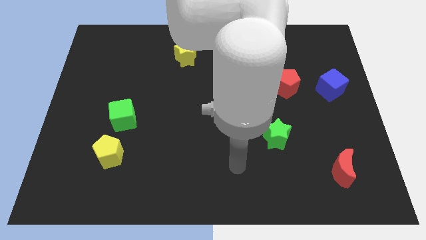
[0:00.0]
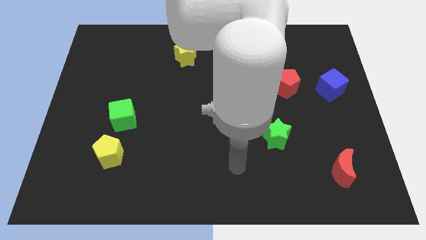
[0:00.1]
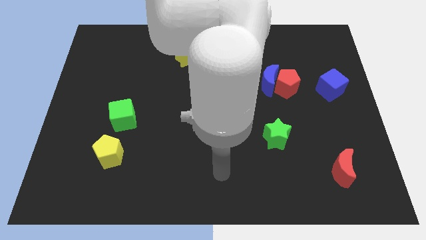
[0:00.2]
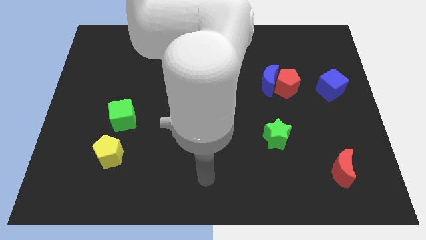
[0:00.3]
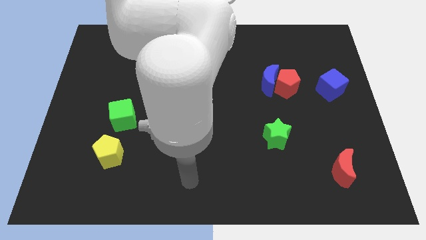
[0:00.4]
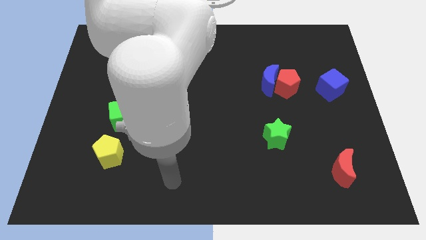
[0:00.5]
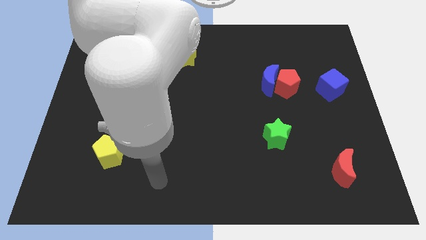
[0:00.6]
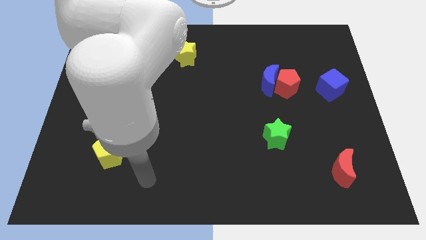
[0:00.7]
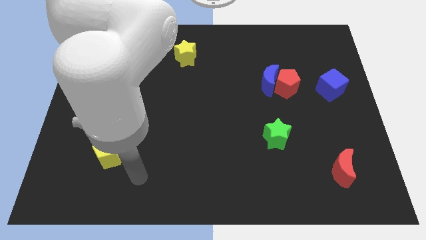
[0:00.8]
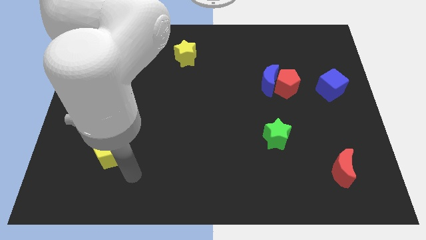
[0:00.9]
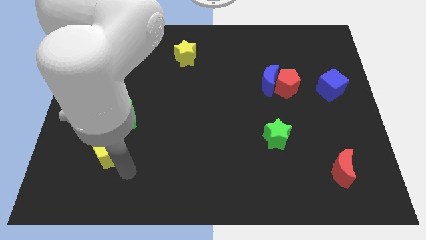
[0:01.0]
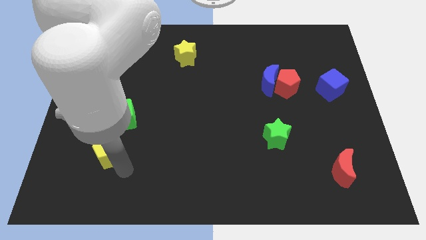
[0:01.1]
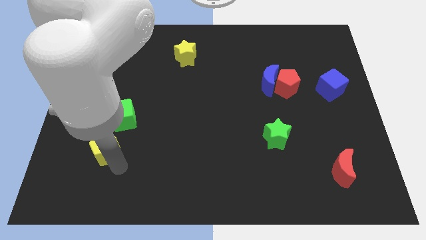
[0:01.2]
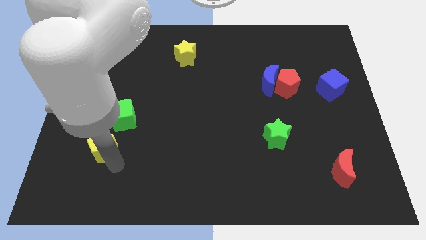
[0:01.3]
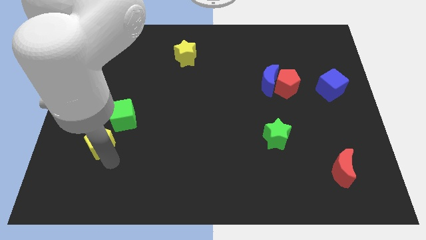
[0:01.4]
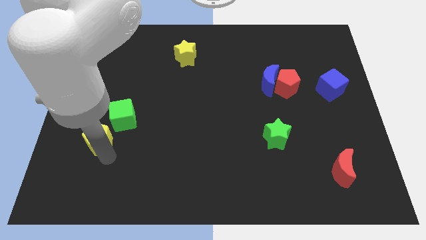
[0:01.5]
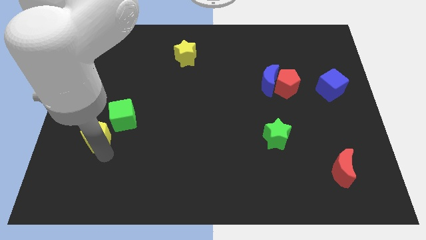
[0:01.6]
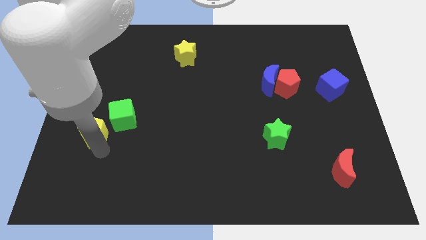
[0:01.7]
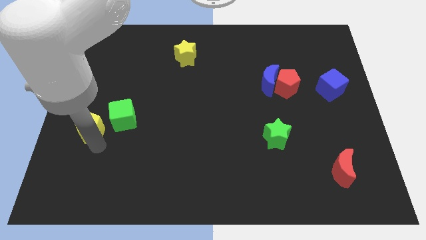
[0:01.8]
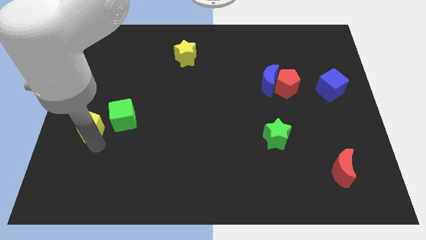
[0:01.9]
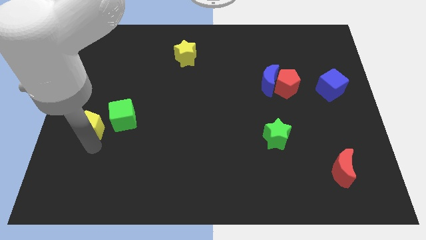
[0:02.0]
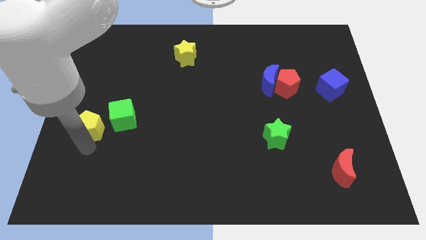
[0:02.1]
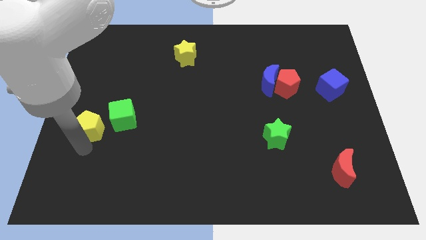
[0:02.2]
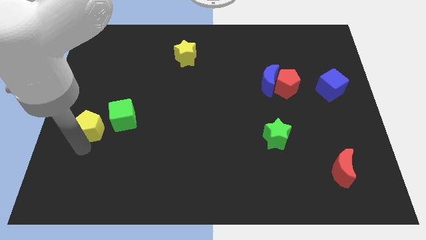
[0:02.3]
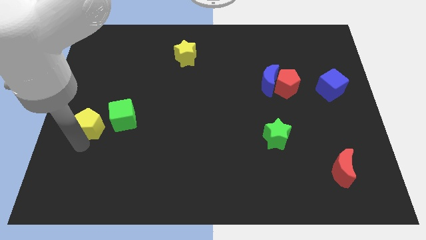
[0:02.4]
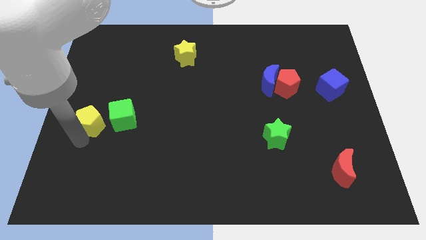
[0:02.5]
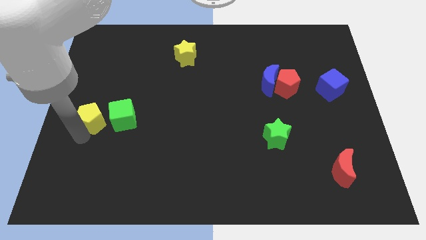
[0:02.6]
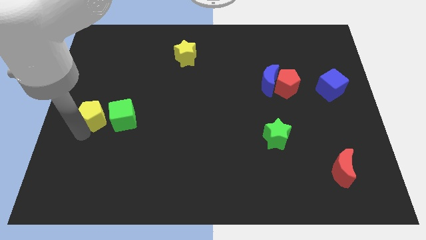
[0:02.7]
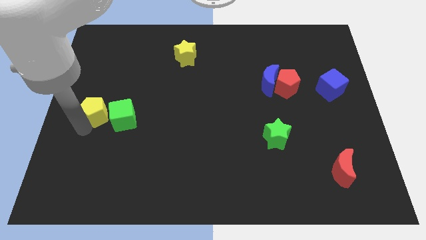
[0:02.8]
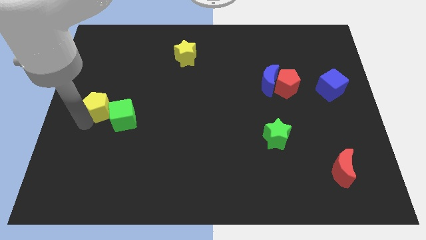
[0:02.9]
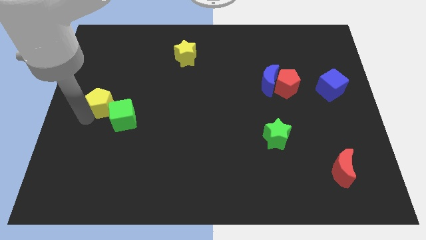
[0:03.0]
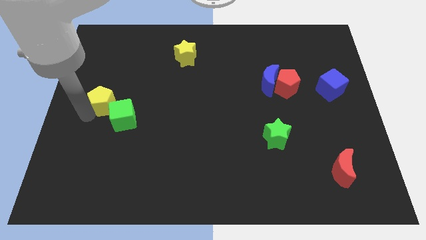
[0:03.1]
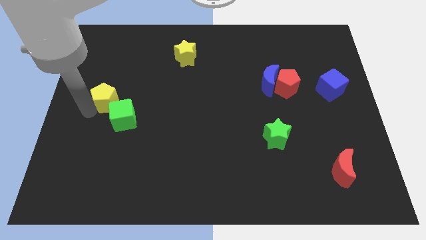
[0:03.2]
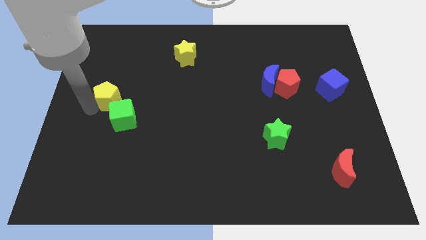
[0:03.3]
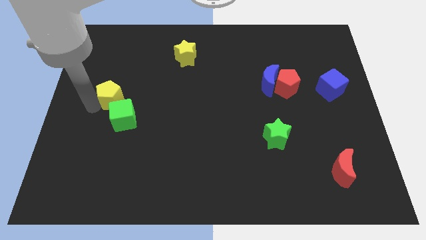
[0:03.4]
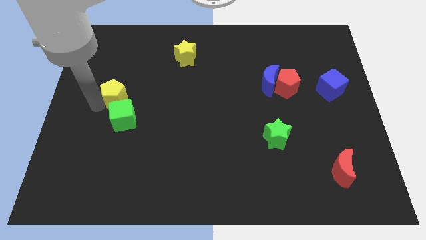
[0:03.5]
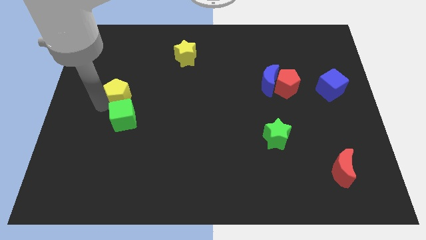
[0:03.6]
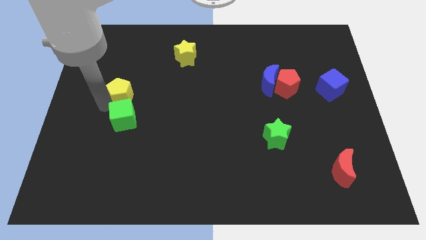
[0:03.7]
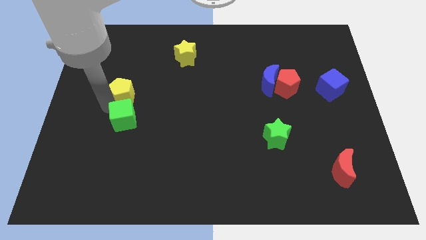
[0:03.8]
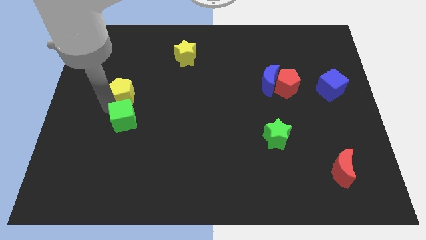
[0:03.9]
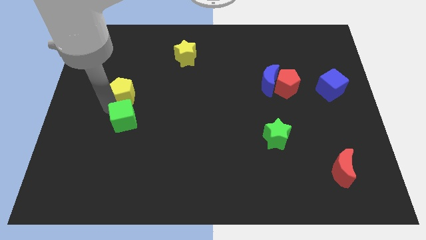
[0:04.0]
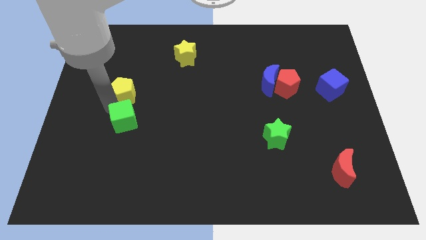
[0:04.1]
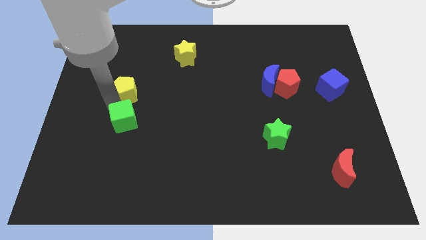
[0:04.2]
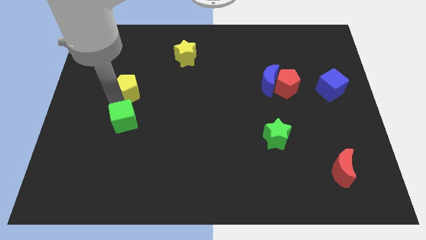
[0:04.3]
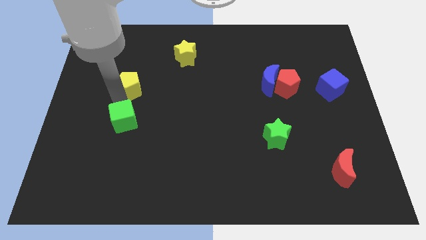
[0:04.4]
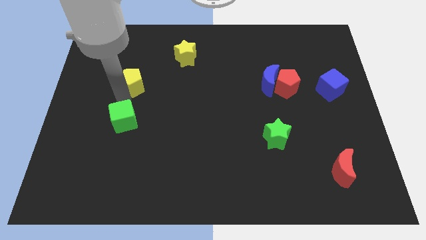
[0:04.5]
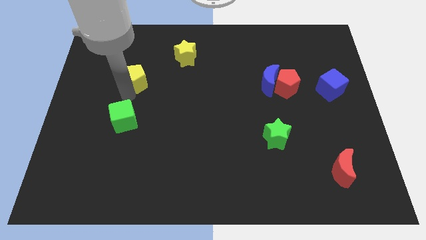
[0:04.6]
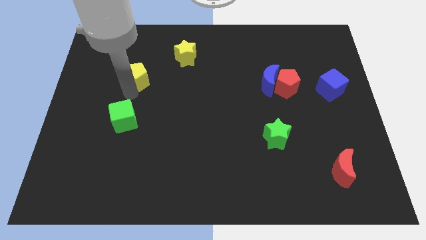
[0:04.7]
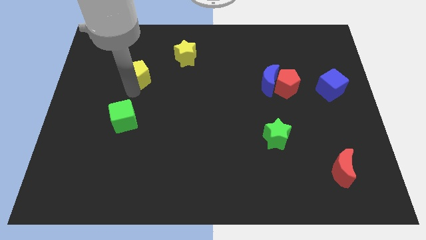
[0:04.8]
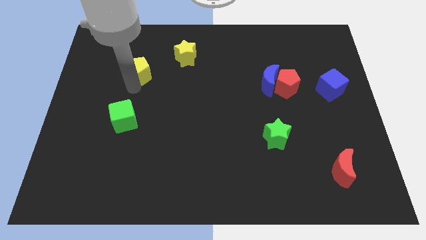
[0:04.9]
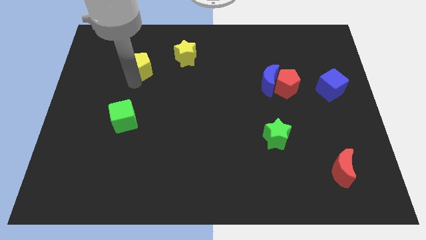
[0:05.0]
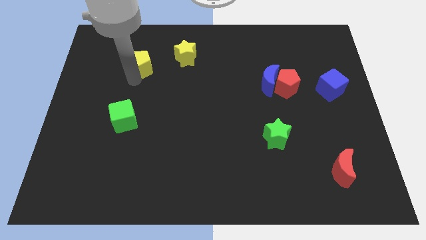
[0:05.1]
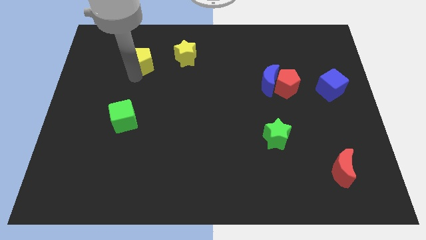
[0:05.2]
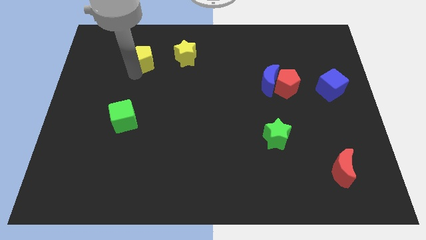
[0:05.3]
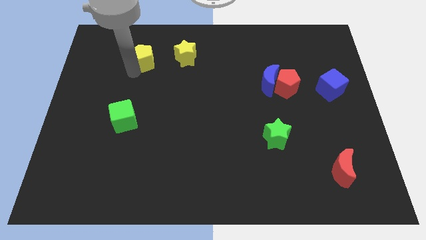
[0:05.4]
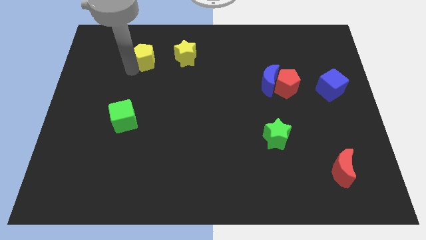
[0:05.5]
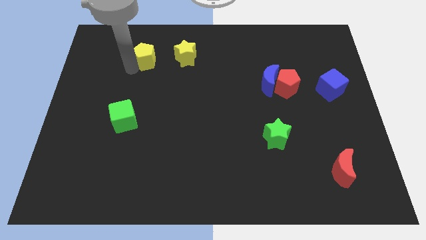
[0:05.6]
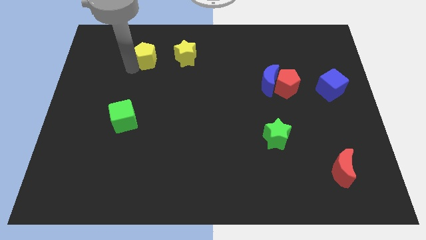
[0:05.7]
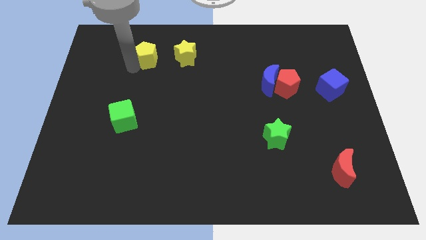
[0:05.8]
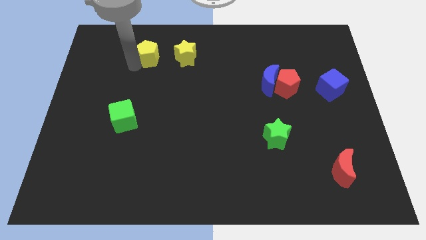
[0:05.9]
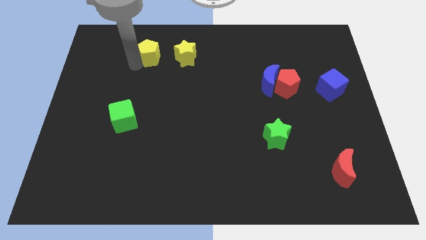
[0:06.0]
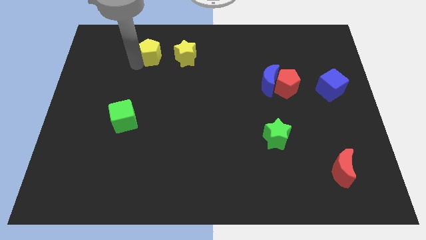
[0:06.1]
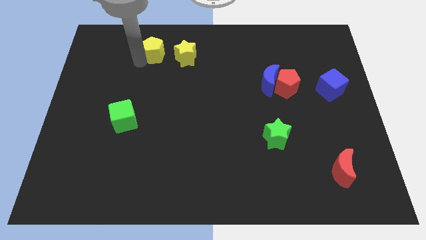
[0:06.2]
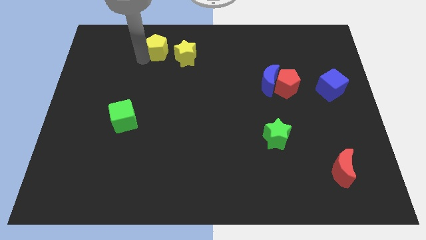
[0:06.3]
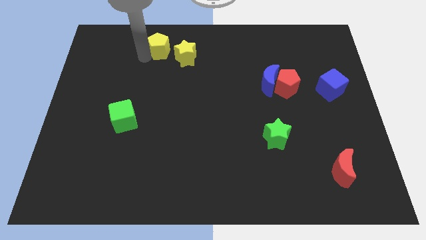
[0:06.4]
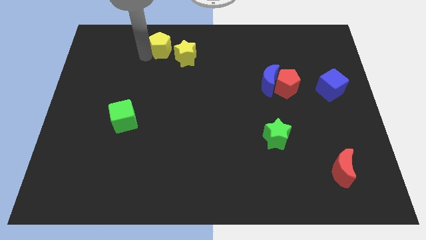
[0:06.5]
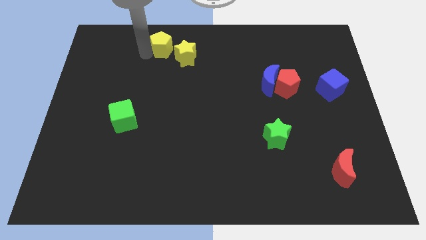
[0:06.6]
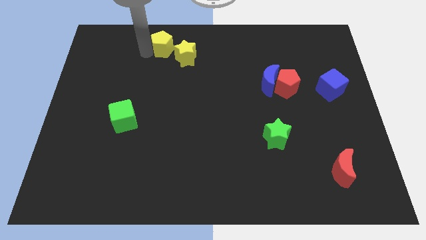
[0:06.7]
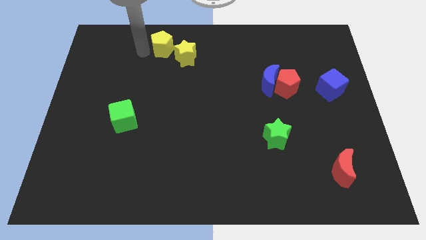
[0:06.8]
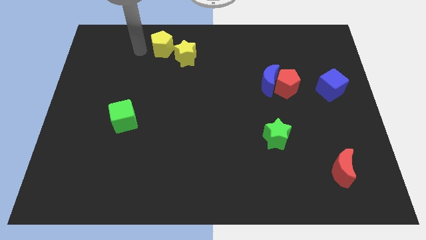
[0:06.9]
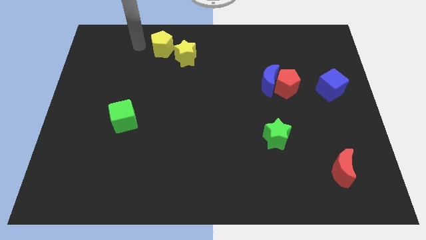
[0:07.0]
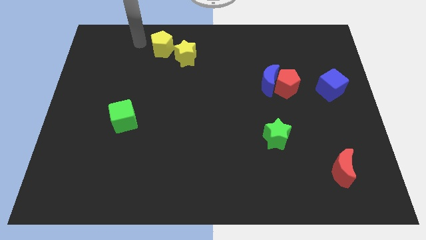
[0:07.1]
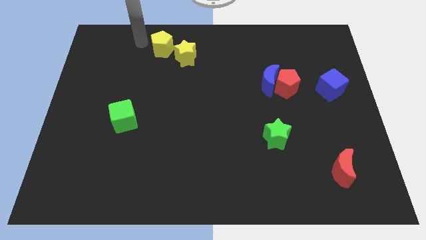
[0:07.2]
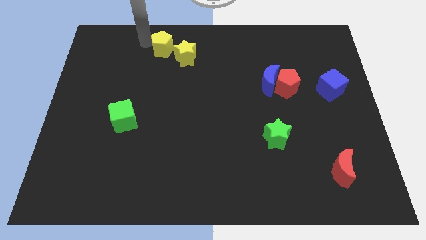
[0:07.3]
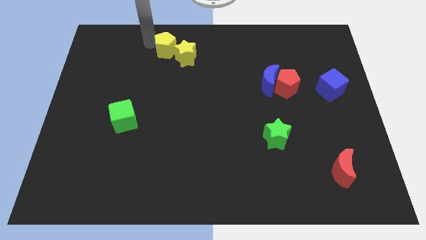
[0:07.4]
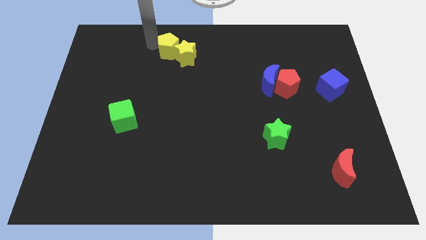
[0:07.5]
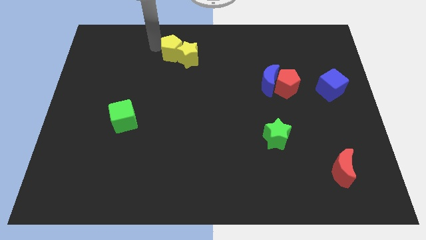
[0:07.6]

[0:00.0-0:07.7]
push the yellow pentagon next to the yellow star

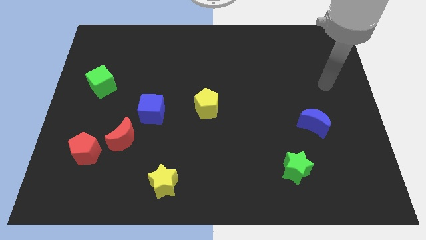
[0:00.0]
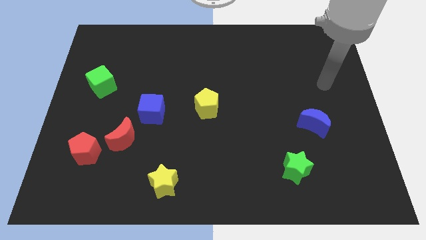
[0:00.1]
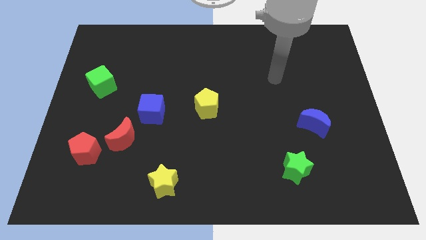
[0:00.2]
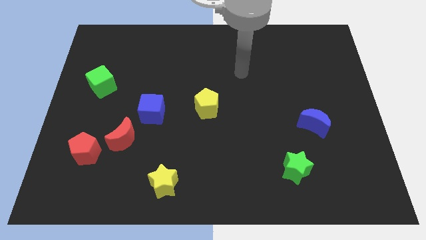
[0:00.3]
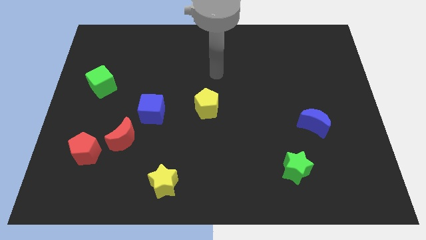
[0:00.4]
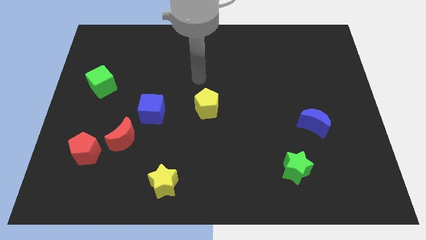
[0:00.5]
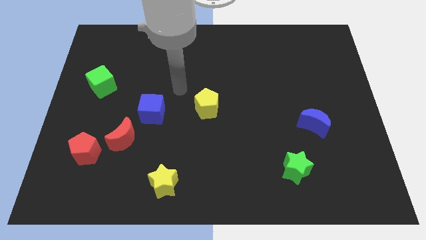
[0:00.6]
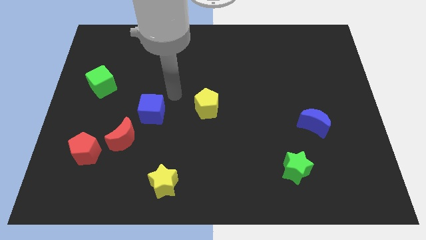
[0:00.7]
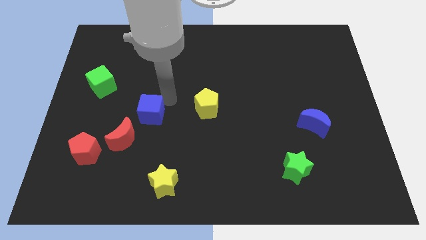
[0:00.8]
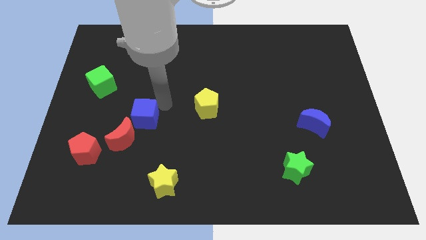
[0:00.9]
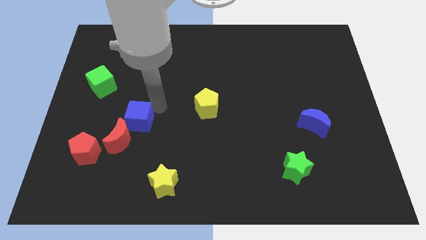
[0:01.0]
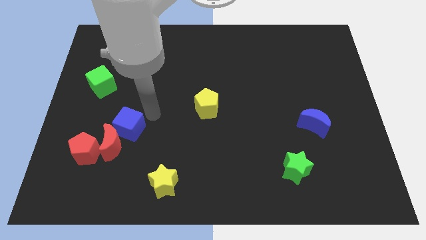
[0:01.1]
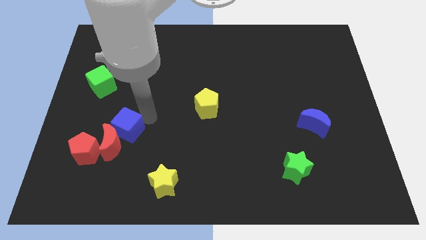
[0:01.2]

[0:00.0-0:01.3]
put the blue cube next to the red moon
